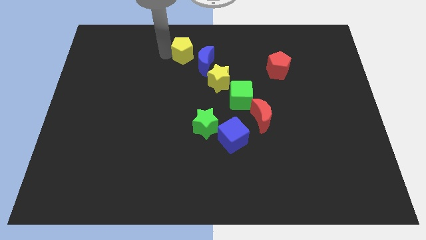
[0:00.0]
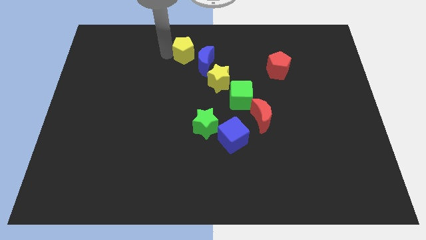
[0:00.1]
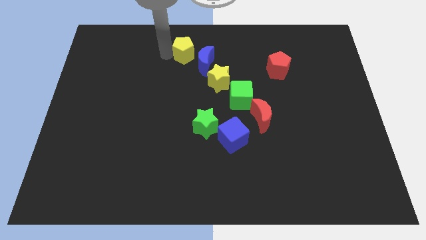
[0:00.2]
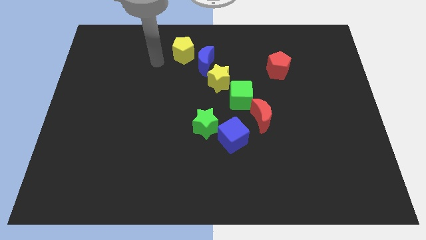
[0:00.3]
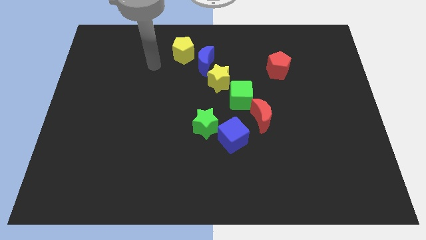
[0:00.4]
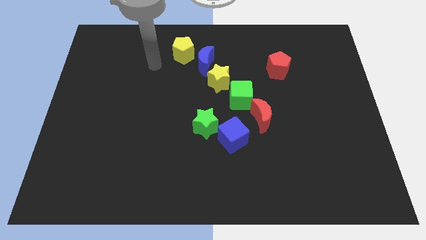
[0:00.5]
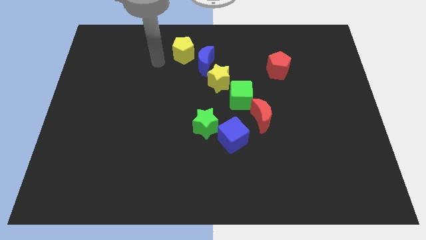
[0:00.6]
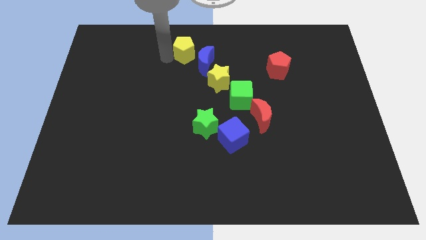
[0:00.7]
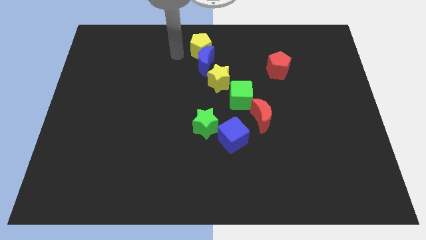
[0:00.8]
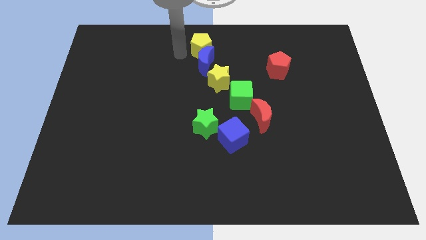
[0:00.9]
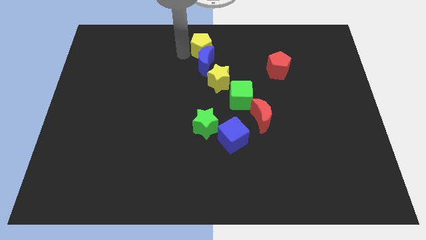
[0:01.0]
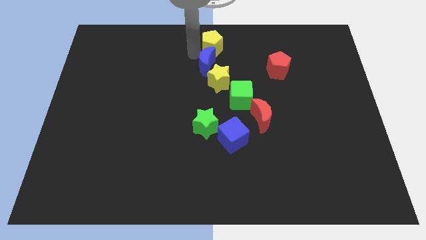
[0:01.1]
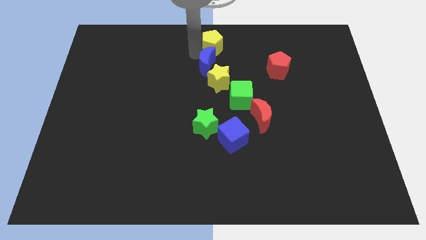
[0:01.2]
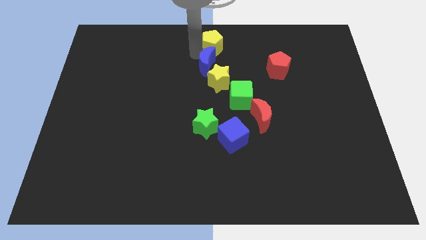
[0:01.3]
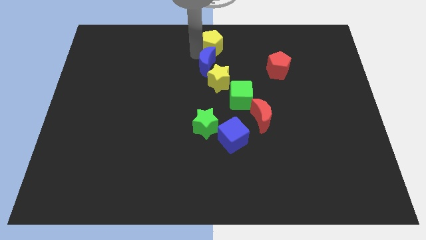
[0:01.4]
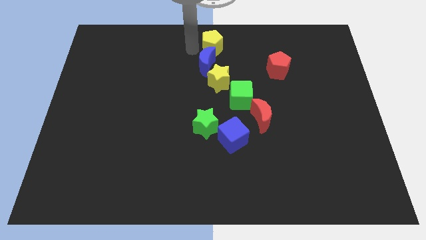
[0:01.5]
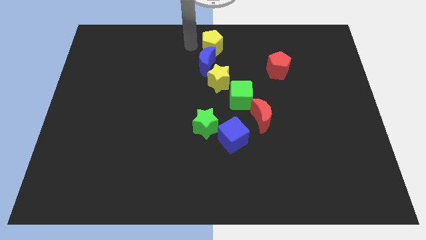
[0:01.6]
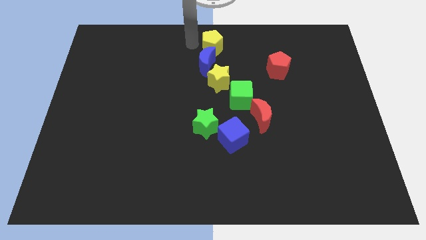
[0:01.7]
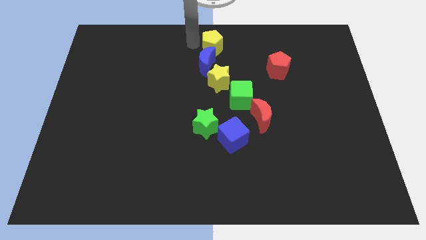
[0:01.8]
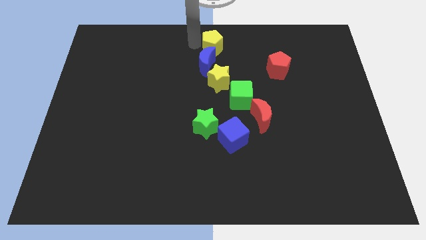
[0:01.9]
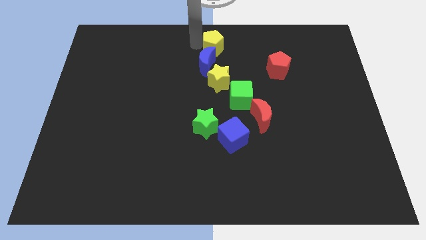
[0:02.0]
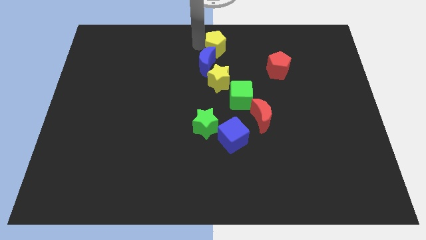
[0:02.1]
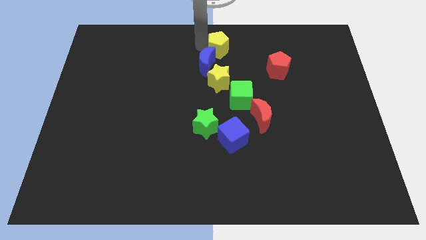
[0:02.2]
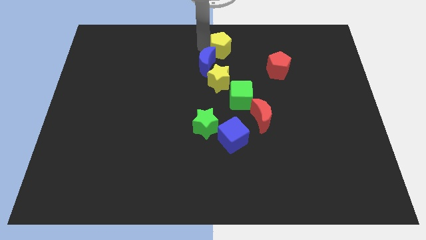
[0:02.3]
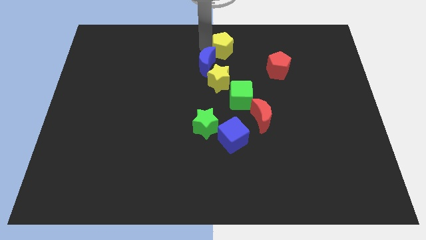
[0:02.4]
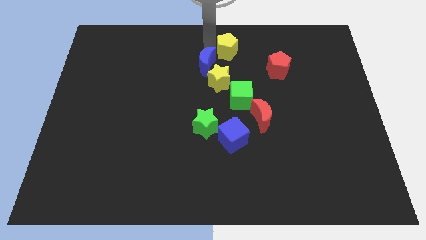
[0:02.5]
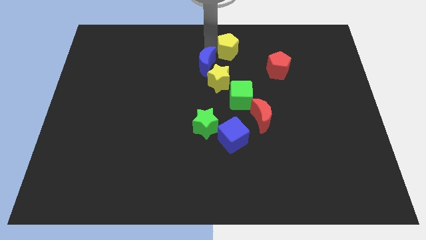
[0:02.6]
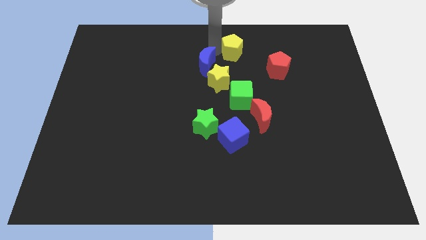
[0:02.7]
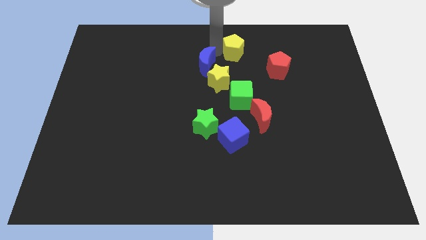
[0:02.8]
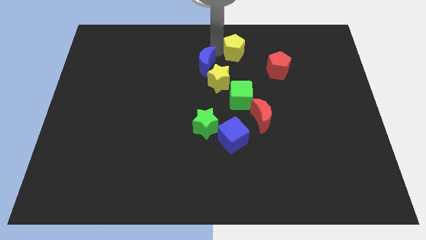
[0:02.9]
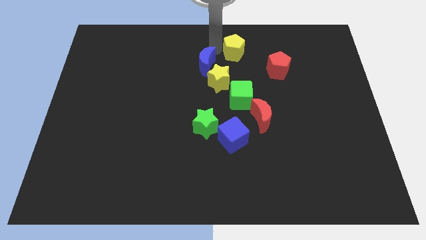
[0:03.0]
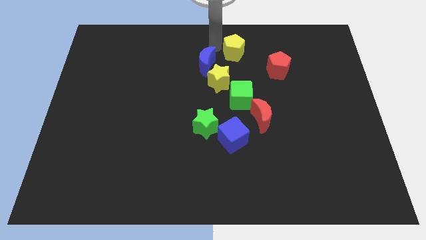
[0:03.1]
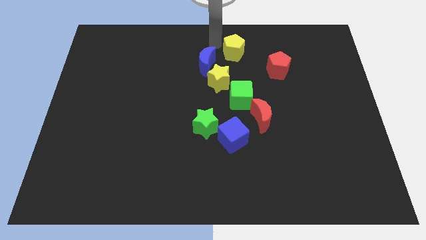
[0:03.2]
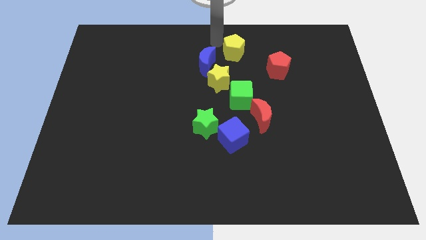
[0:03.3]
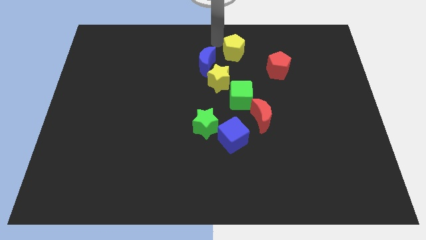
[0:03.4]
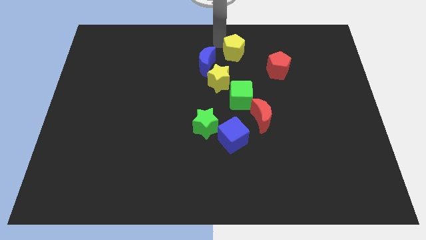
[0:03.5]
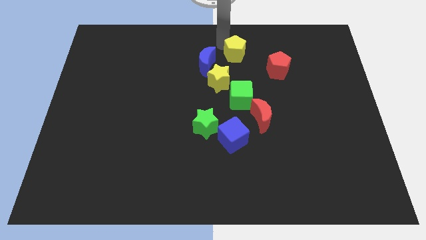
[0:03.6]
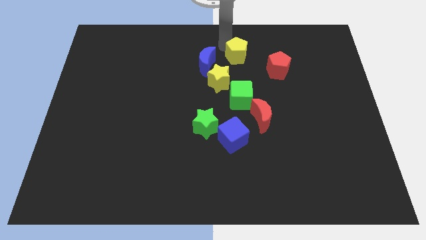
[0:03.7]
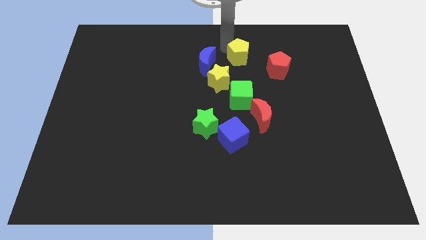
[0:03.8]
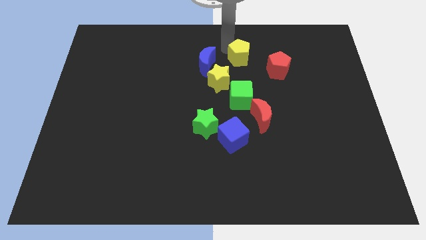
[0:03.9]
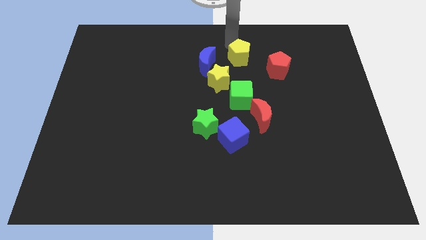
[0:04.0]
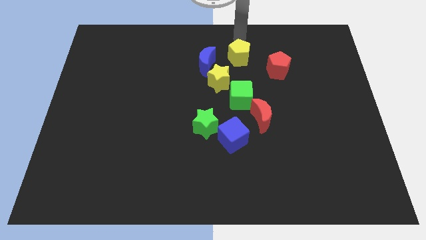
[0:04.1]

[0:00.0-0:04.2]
place yellow pentagon vertical to green cube

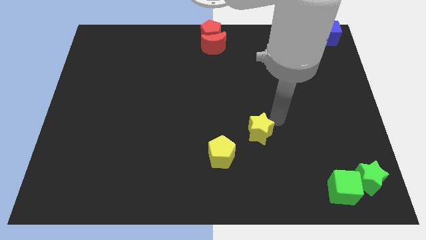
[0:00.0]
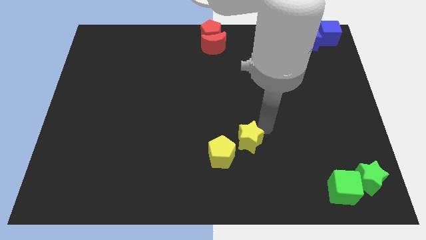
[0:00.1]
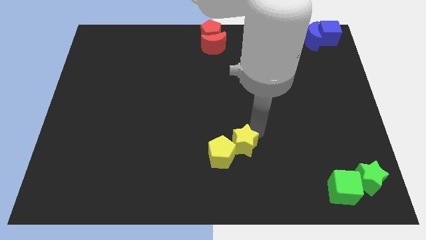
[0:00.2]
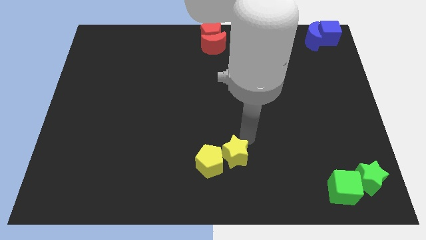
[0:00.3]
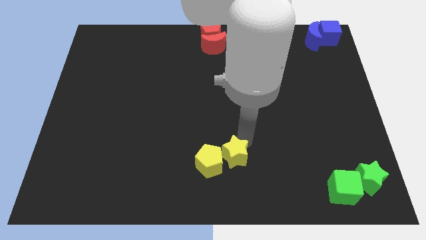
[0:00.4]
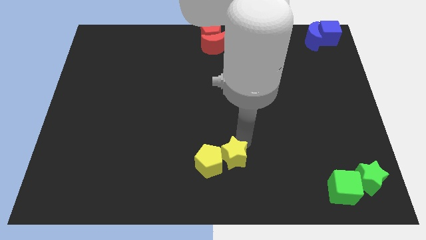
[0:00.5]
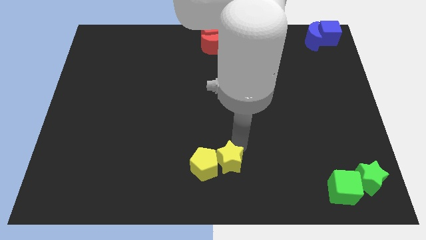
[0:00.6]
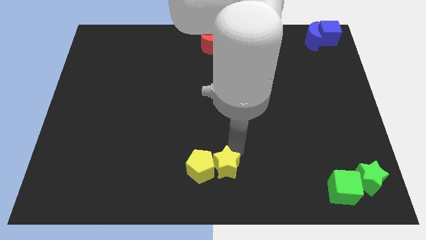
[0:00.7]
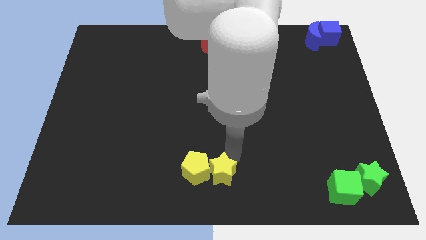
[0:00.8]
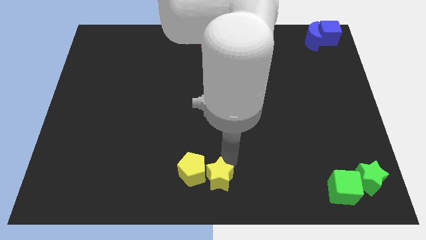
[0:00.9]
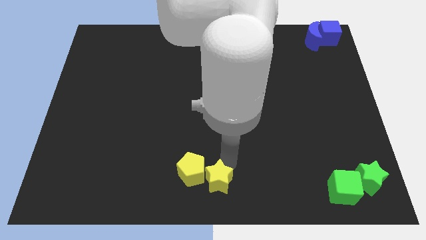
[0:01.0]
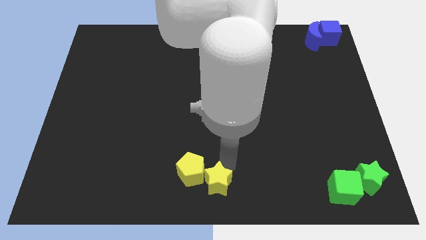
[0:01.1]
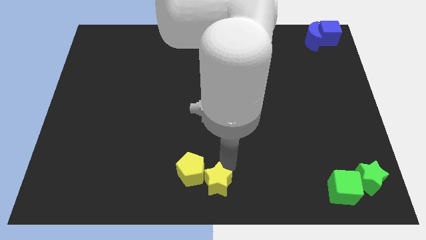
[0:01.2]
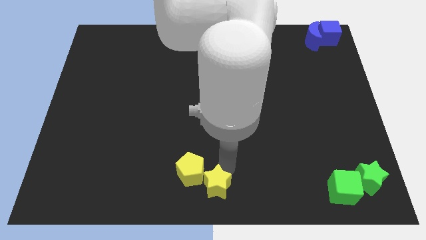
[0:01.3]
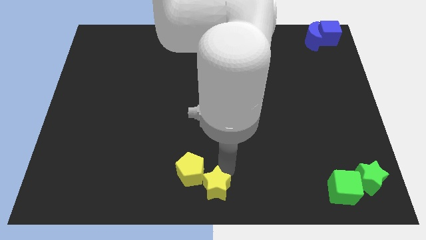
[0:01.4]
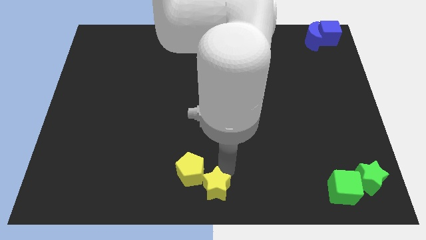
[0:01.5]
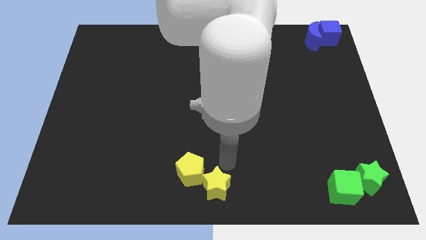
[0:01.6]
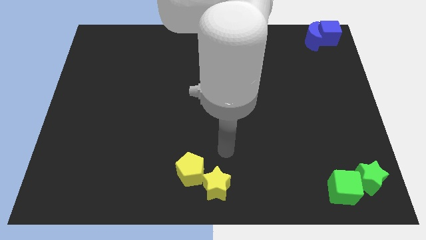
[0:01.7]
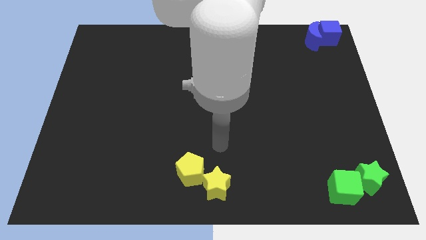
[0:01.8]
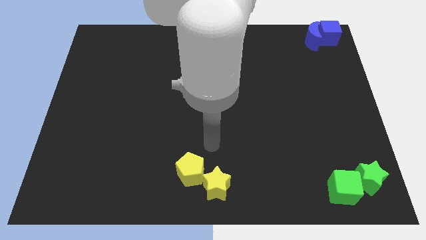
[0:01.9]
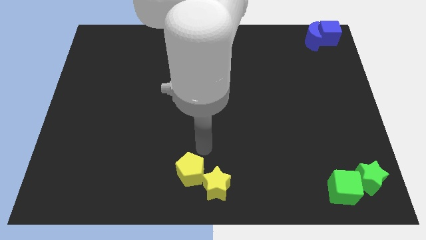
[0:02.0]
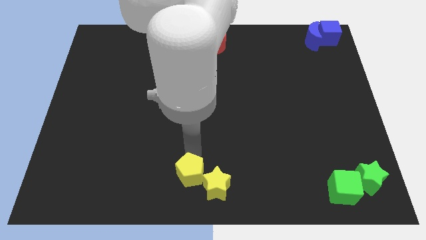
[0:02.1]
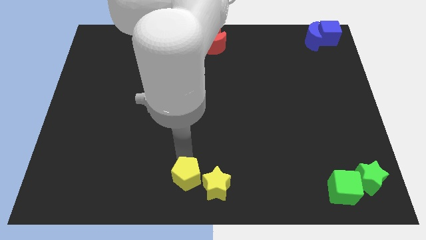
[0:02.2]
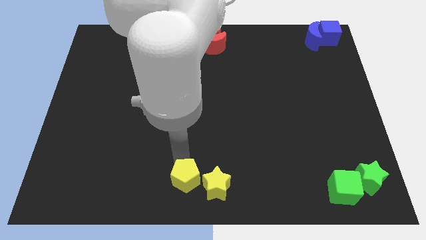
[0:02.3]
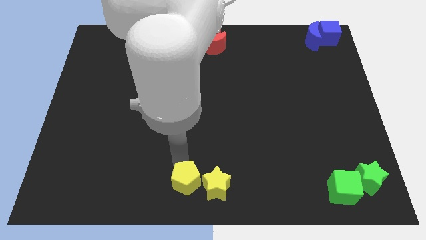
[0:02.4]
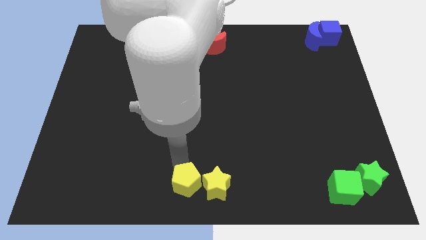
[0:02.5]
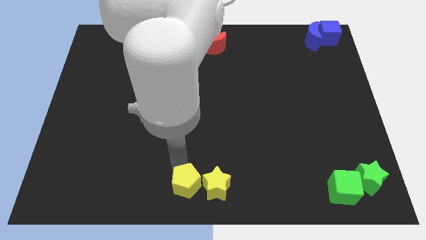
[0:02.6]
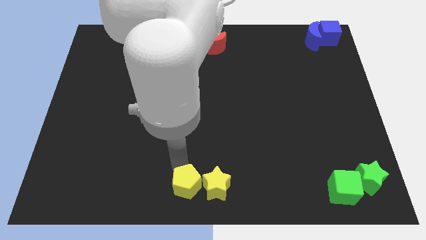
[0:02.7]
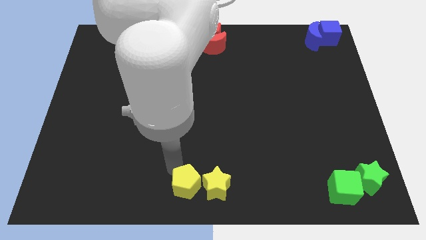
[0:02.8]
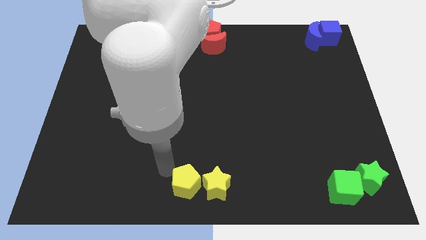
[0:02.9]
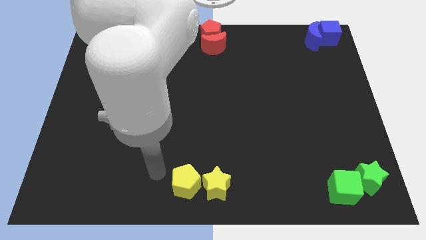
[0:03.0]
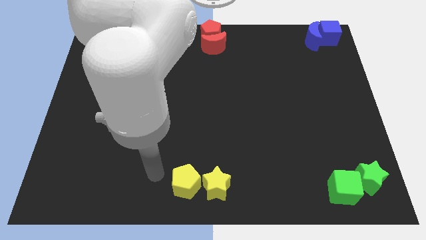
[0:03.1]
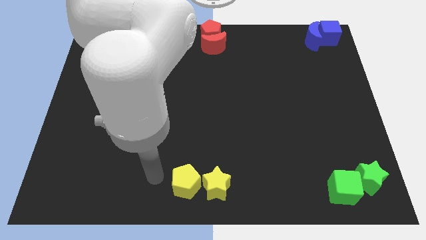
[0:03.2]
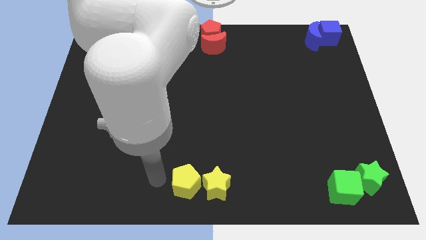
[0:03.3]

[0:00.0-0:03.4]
move the yellow pentagon left to the yellow star

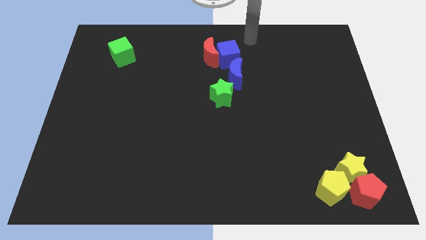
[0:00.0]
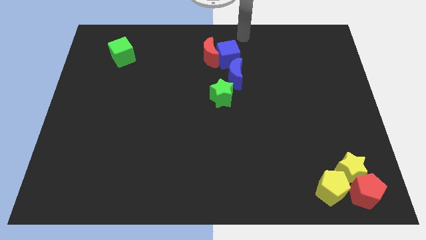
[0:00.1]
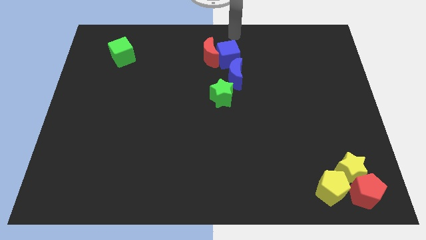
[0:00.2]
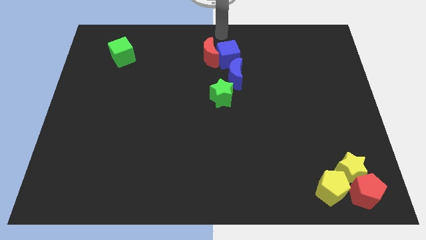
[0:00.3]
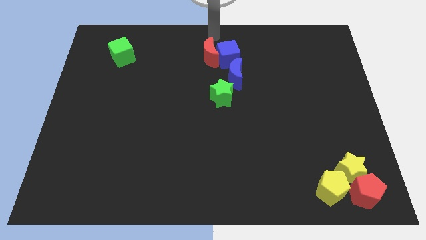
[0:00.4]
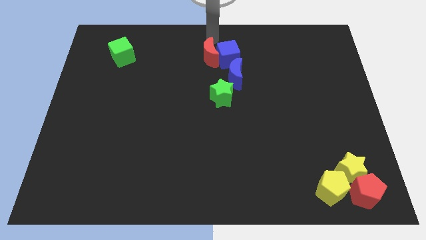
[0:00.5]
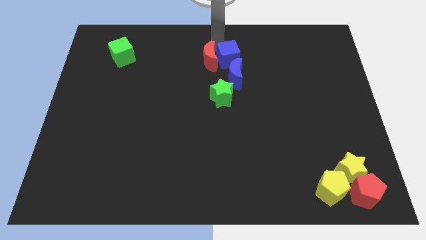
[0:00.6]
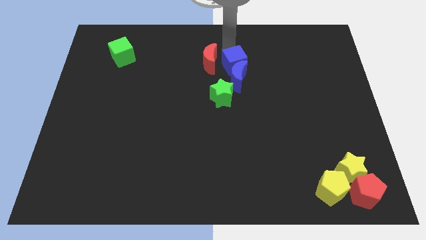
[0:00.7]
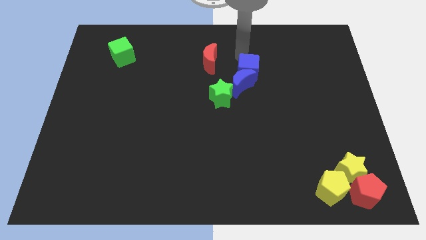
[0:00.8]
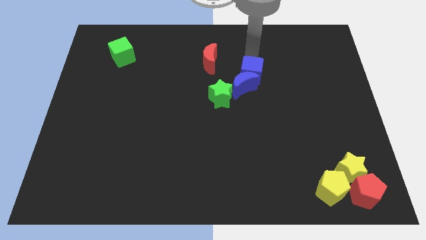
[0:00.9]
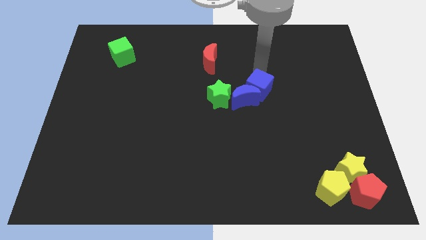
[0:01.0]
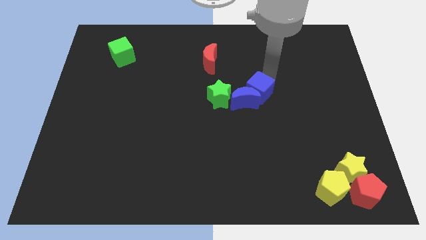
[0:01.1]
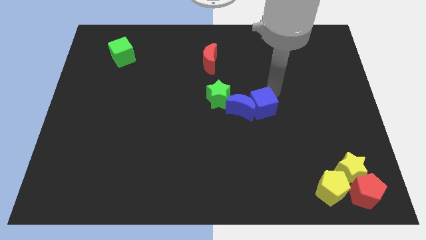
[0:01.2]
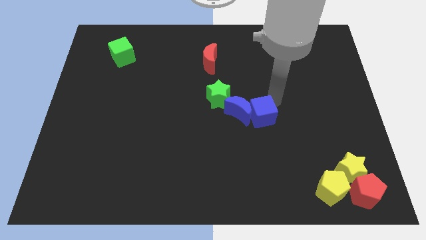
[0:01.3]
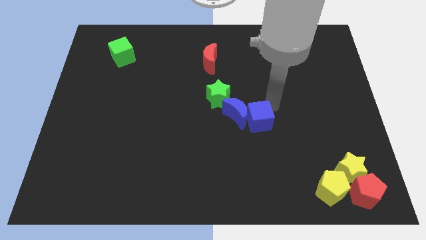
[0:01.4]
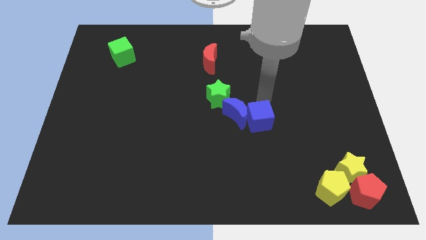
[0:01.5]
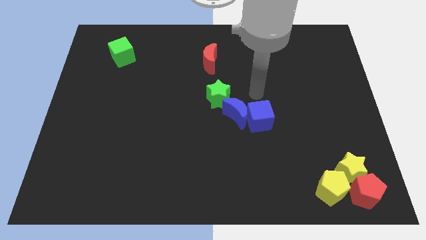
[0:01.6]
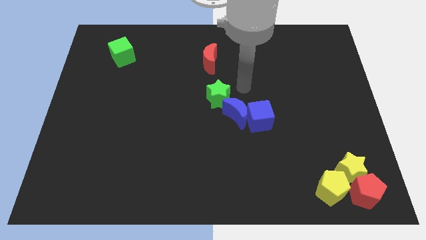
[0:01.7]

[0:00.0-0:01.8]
separate the blue cube from the red moon
